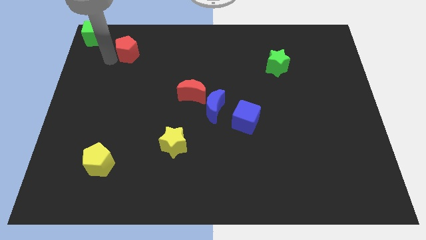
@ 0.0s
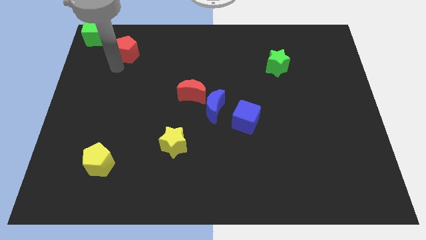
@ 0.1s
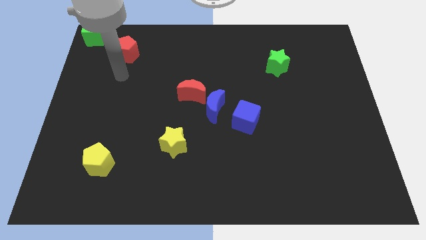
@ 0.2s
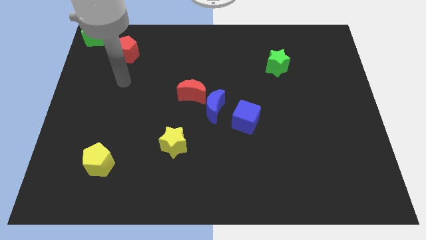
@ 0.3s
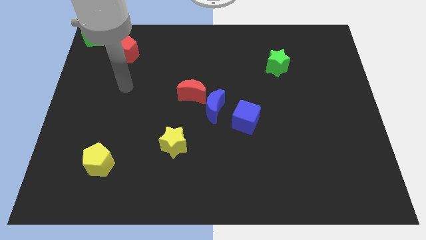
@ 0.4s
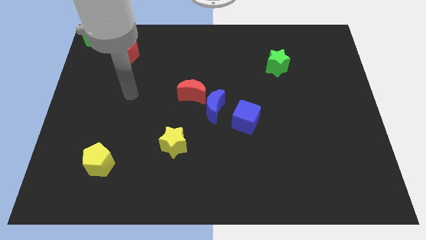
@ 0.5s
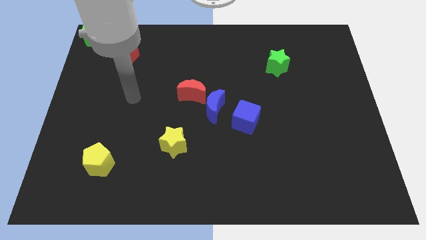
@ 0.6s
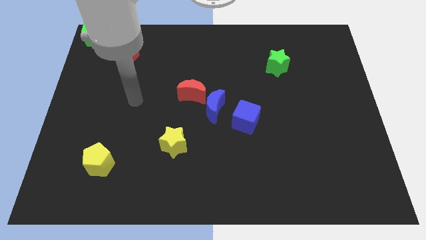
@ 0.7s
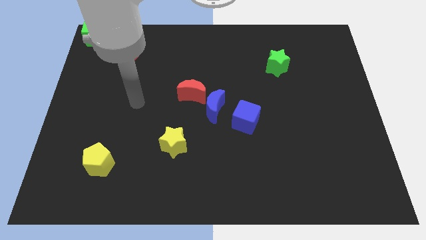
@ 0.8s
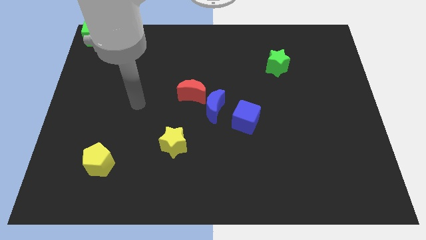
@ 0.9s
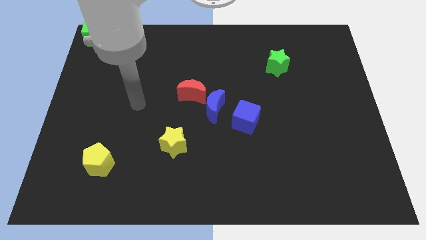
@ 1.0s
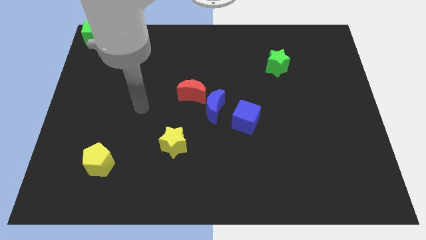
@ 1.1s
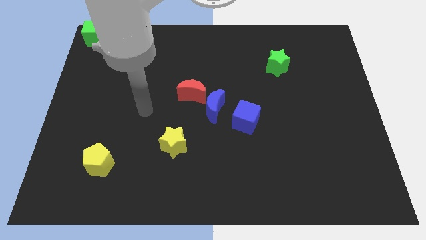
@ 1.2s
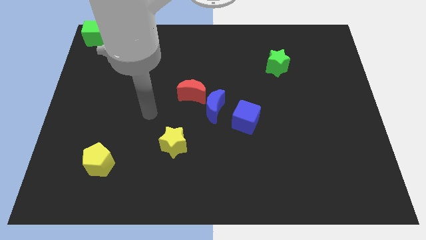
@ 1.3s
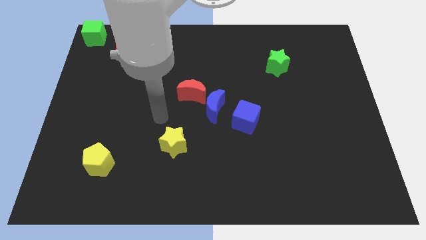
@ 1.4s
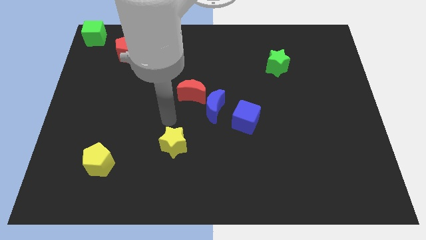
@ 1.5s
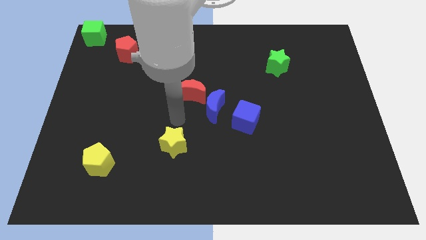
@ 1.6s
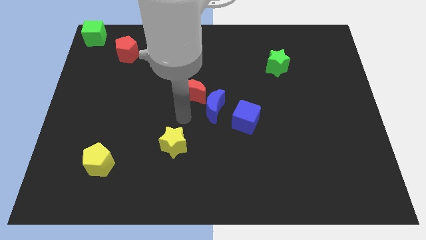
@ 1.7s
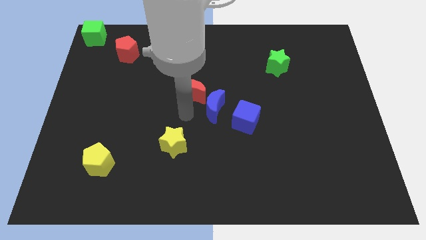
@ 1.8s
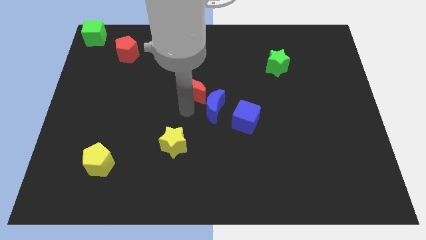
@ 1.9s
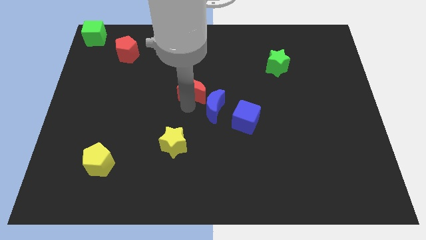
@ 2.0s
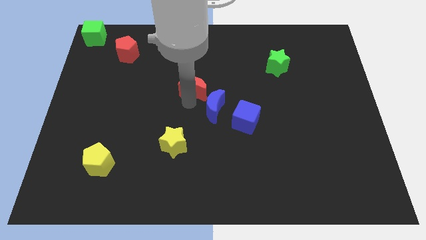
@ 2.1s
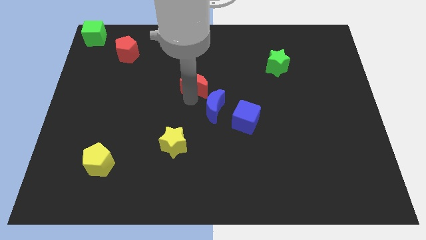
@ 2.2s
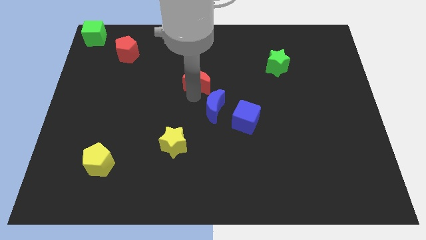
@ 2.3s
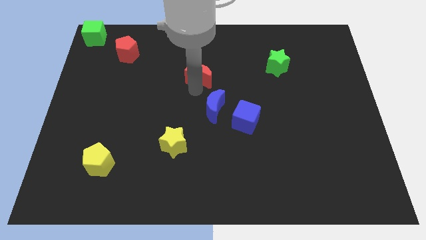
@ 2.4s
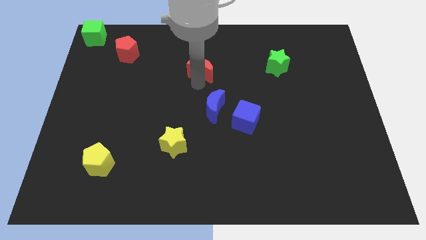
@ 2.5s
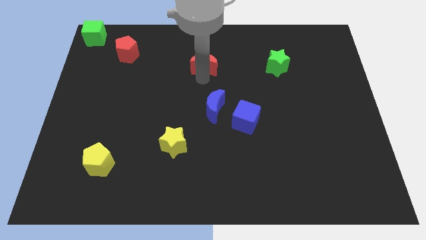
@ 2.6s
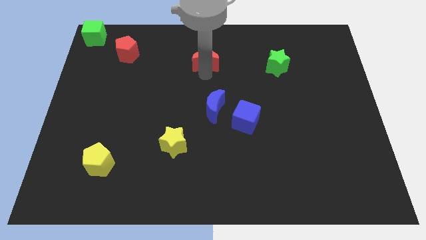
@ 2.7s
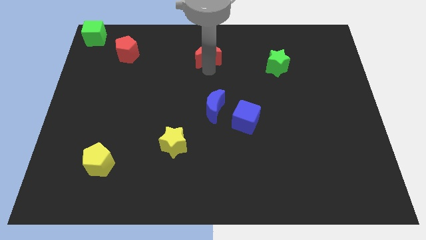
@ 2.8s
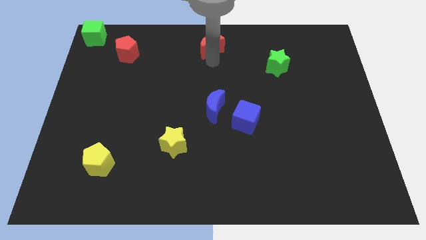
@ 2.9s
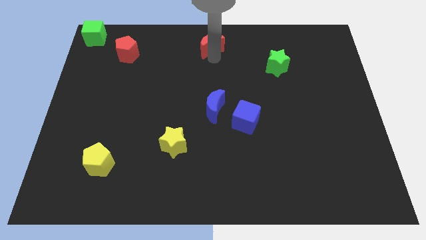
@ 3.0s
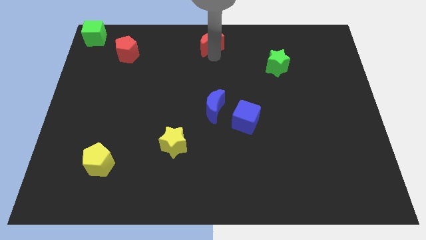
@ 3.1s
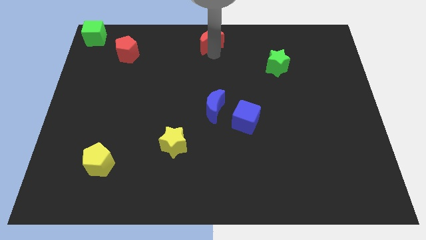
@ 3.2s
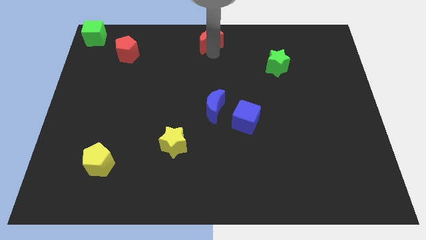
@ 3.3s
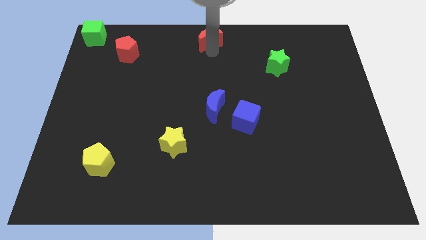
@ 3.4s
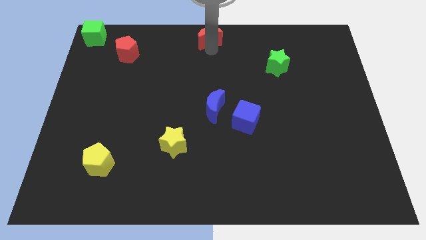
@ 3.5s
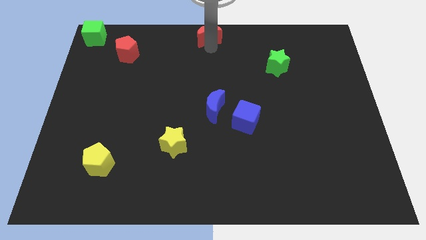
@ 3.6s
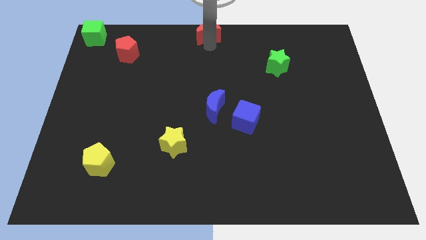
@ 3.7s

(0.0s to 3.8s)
place the red moon left at the top left green star

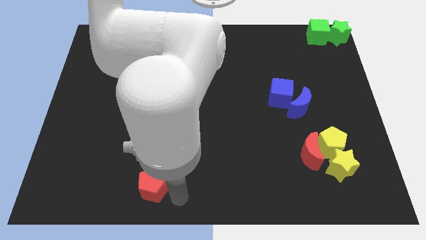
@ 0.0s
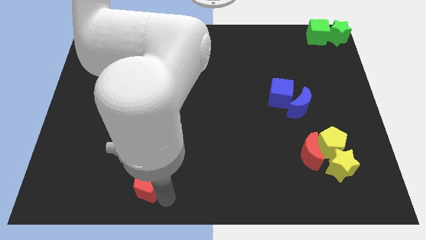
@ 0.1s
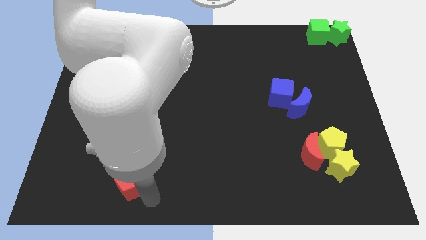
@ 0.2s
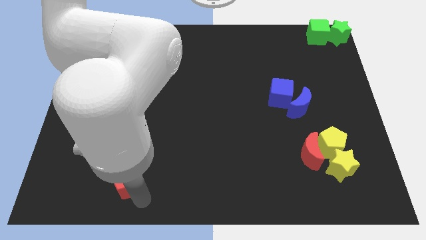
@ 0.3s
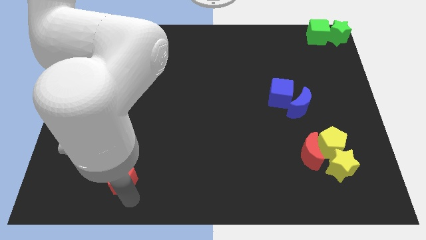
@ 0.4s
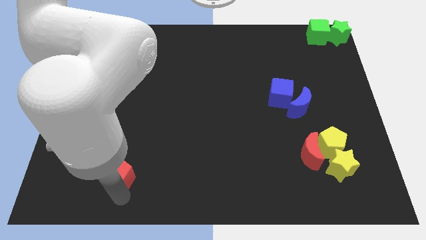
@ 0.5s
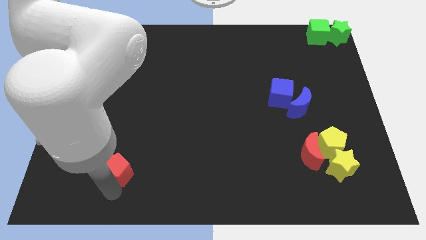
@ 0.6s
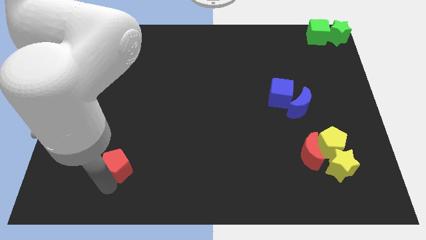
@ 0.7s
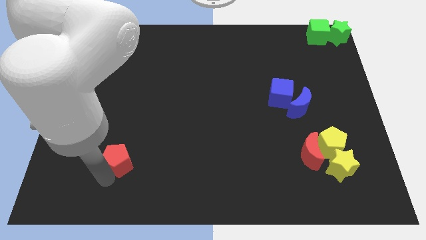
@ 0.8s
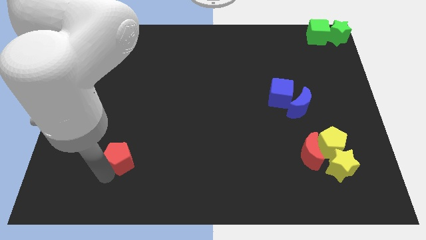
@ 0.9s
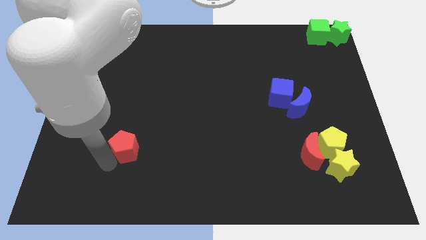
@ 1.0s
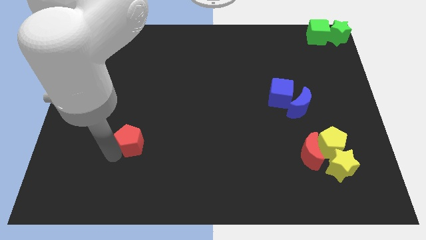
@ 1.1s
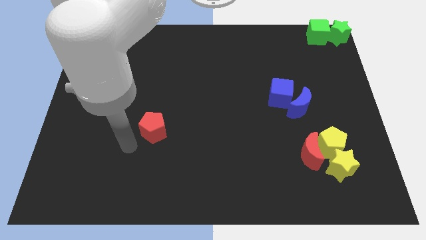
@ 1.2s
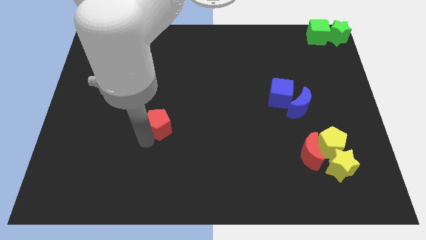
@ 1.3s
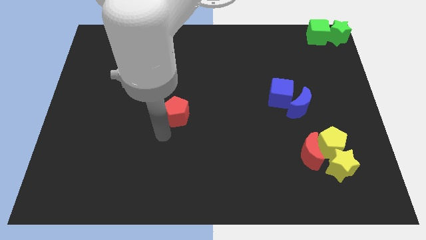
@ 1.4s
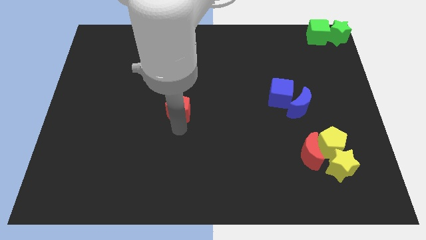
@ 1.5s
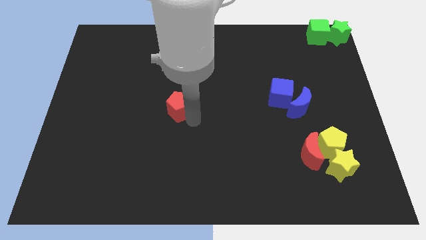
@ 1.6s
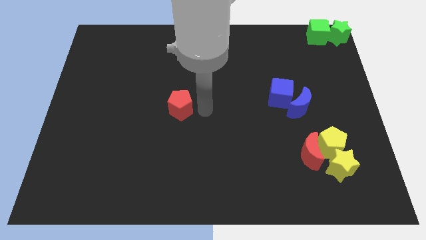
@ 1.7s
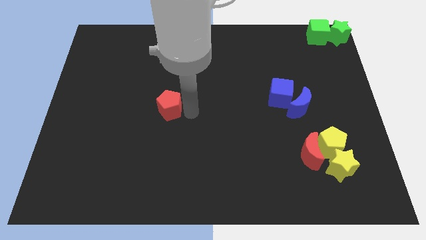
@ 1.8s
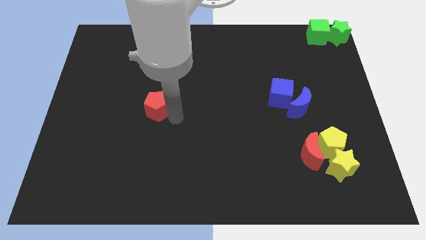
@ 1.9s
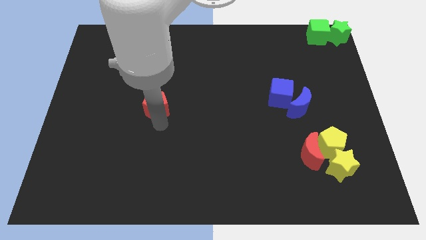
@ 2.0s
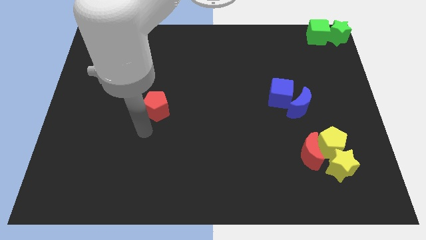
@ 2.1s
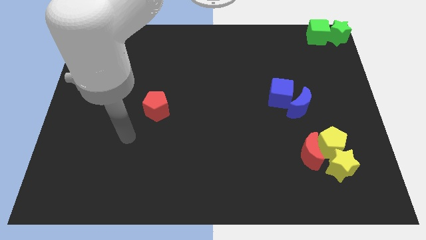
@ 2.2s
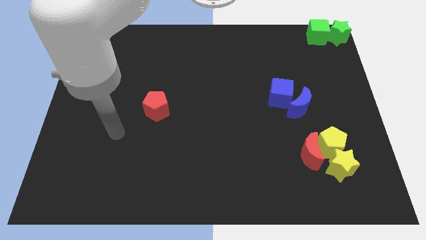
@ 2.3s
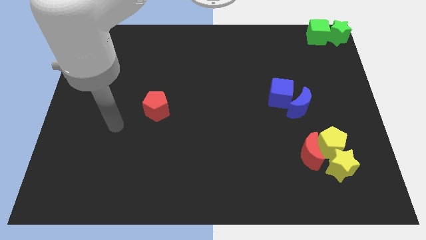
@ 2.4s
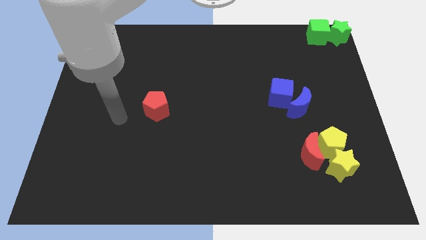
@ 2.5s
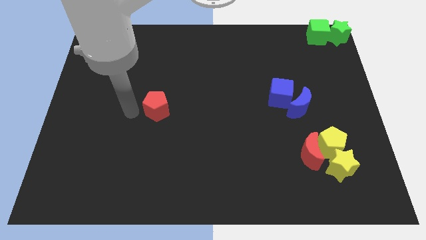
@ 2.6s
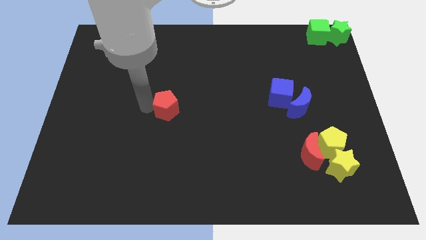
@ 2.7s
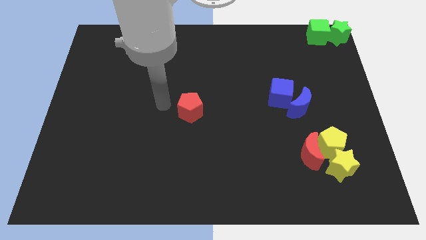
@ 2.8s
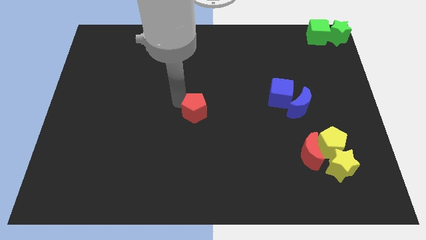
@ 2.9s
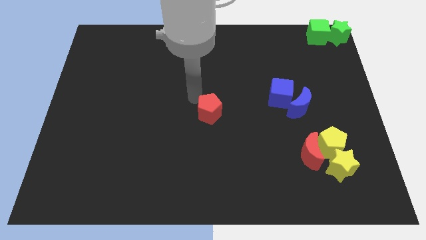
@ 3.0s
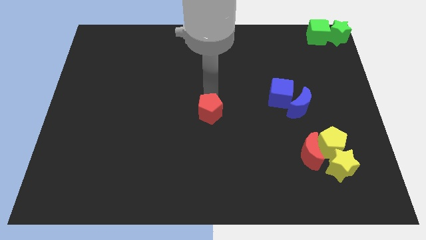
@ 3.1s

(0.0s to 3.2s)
move the red pentagon to the center of the board

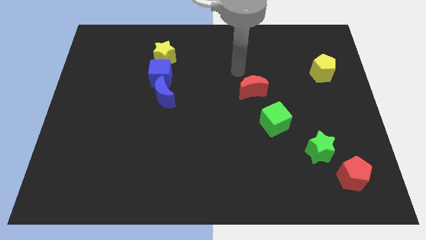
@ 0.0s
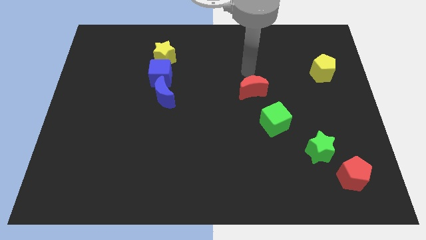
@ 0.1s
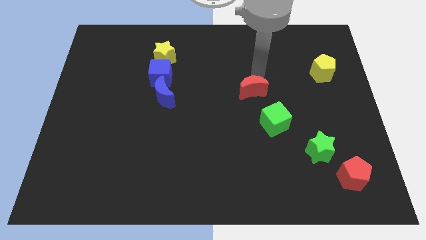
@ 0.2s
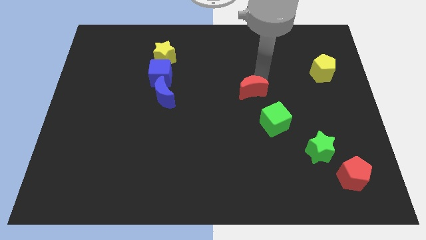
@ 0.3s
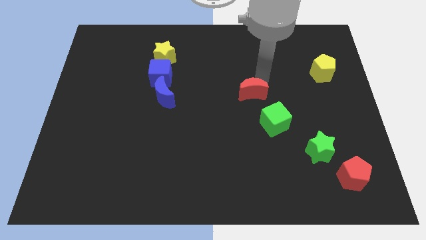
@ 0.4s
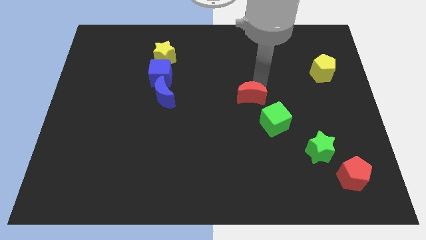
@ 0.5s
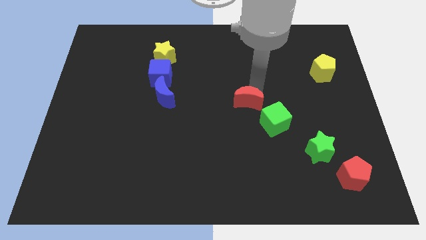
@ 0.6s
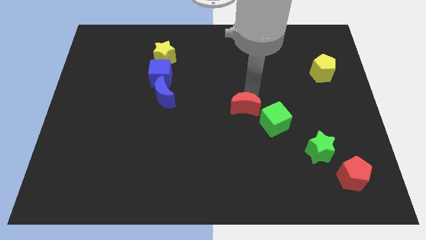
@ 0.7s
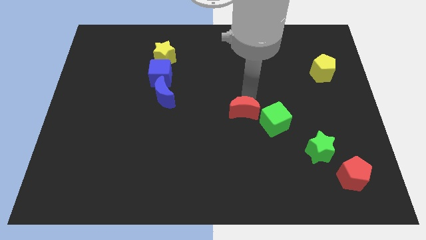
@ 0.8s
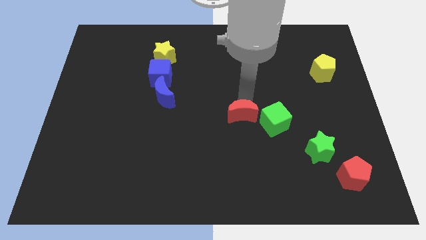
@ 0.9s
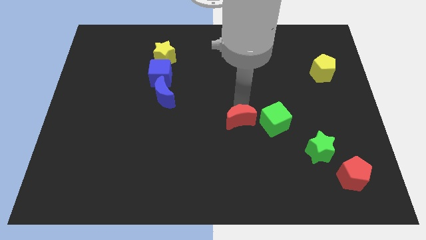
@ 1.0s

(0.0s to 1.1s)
push red moon to the left of green cube

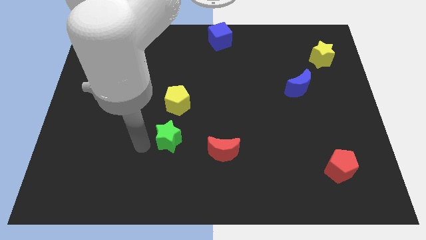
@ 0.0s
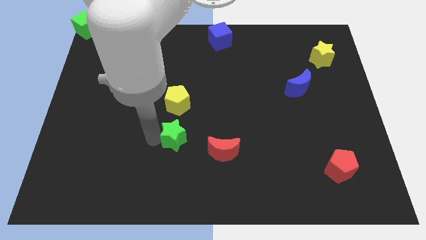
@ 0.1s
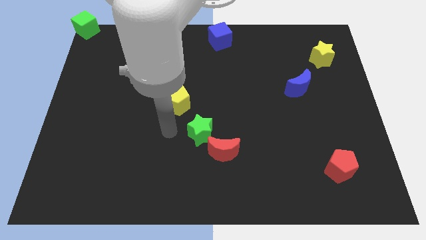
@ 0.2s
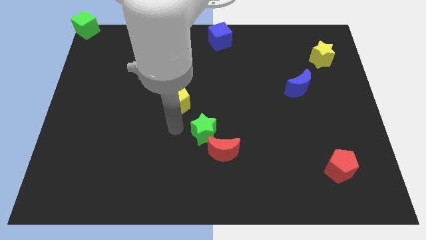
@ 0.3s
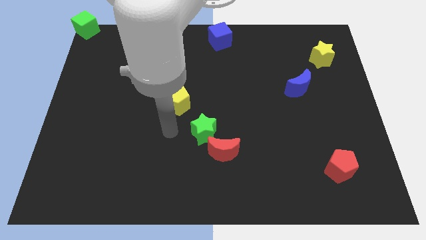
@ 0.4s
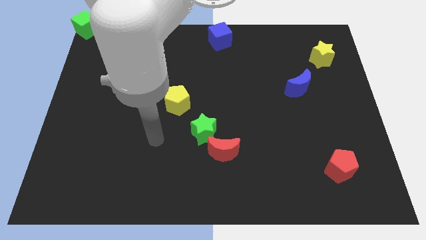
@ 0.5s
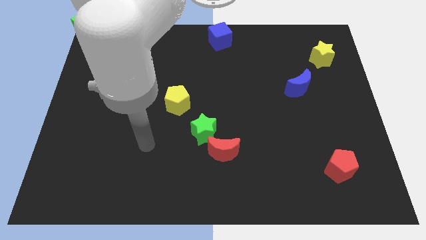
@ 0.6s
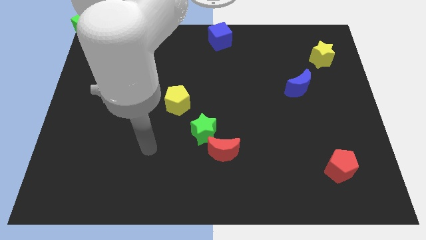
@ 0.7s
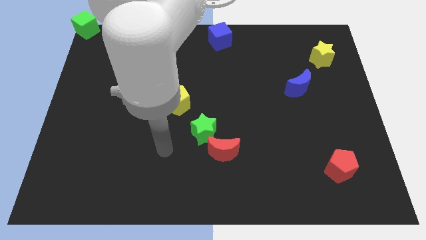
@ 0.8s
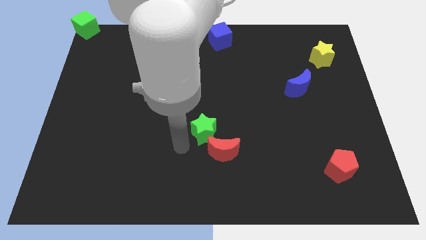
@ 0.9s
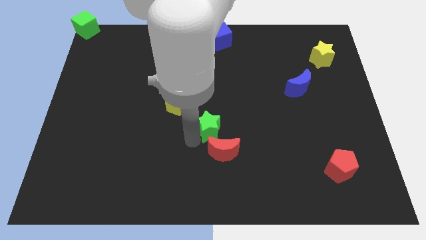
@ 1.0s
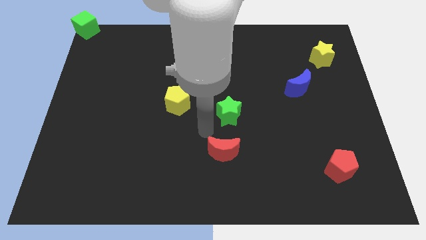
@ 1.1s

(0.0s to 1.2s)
place green star above red crescent
